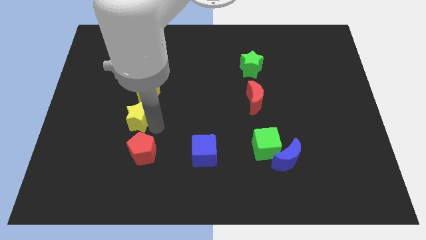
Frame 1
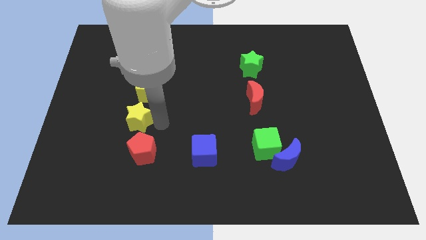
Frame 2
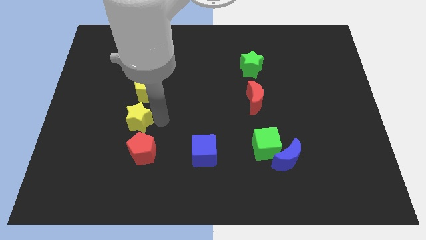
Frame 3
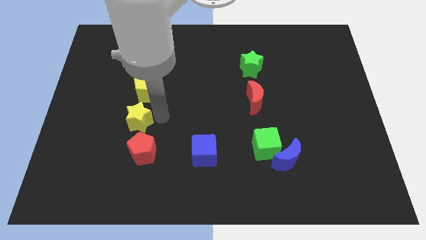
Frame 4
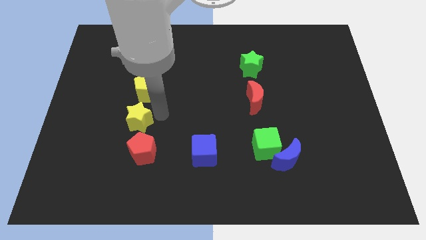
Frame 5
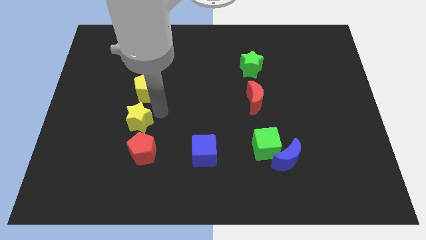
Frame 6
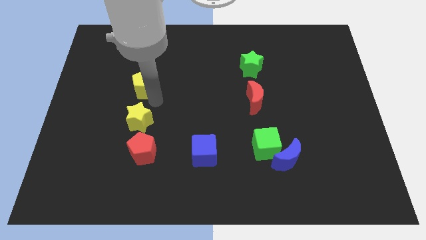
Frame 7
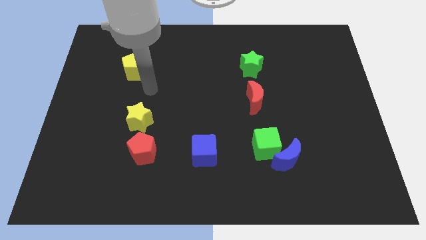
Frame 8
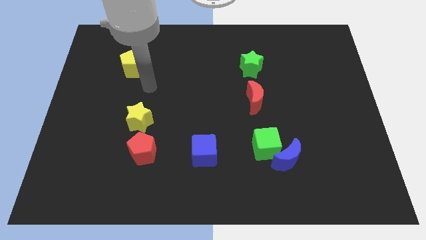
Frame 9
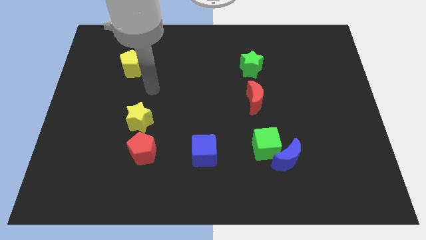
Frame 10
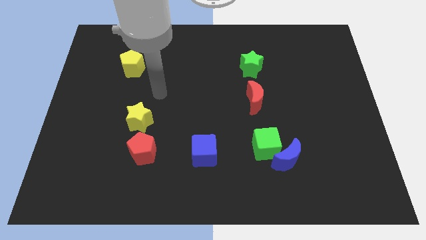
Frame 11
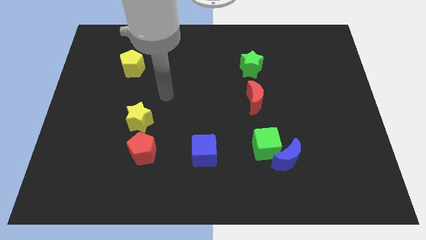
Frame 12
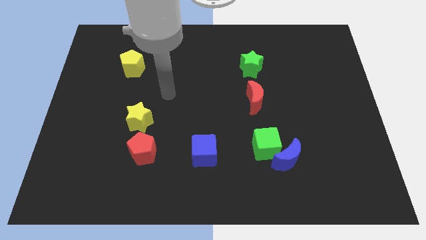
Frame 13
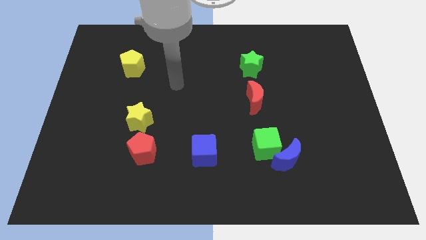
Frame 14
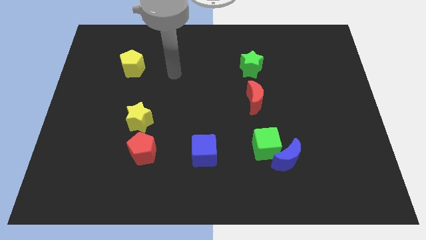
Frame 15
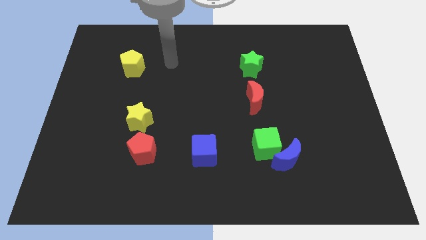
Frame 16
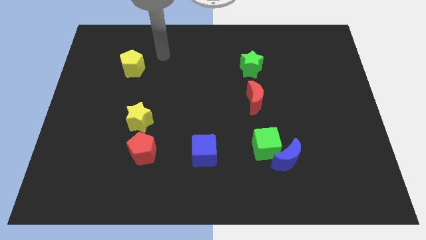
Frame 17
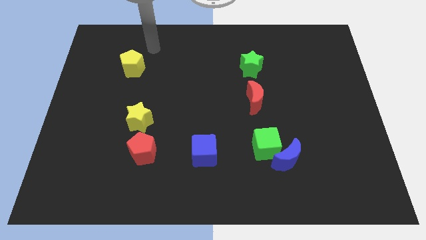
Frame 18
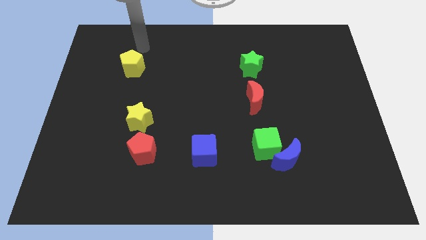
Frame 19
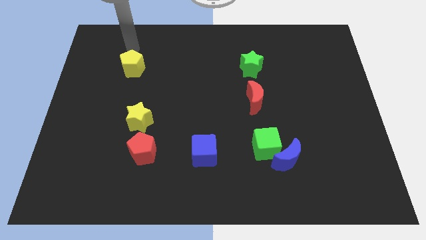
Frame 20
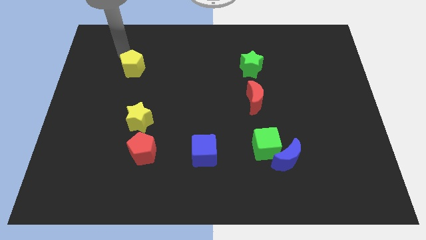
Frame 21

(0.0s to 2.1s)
move the yellow pentagon parallel to green star

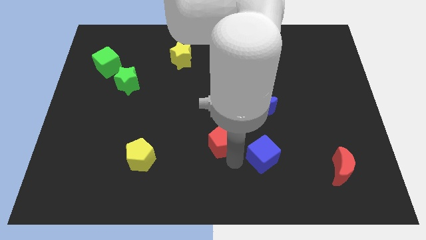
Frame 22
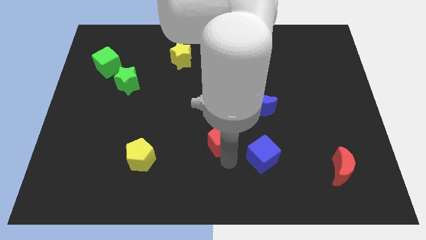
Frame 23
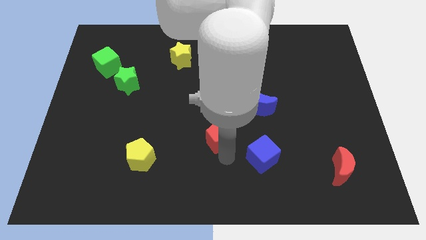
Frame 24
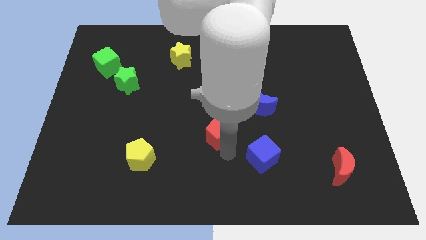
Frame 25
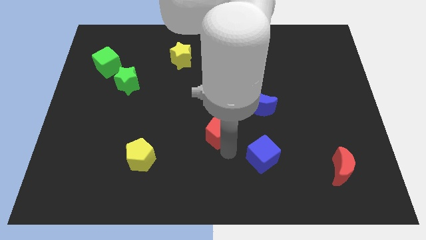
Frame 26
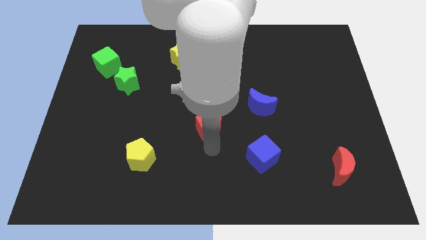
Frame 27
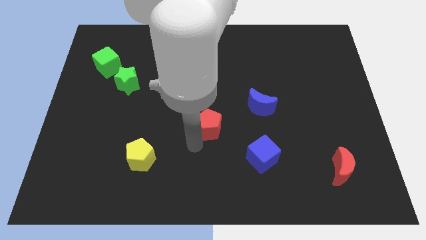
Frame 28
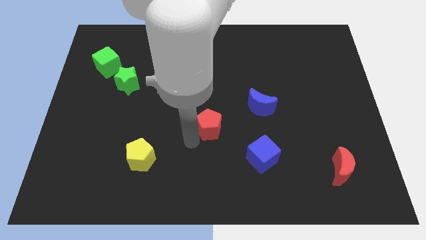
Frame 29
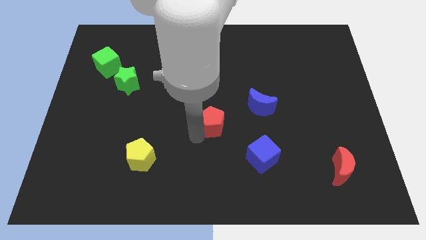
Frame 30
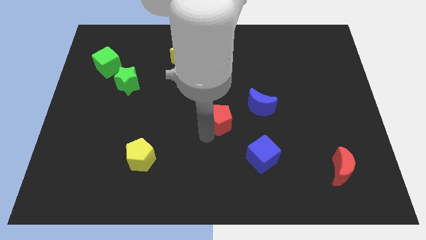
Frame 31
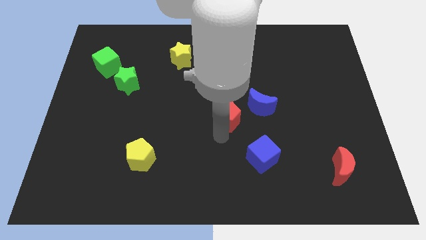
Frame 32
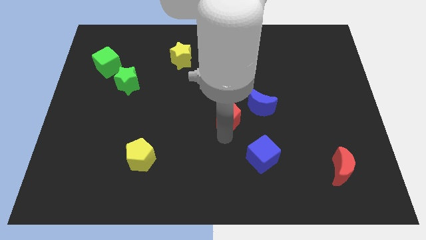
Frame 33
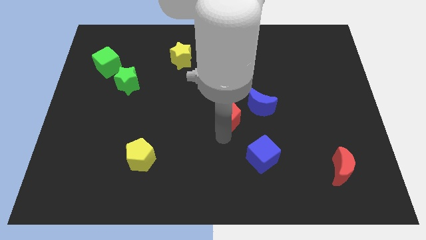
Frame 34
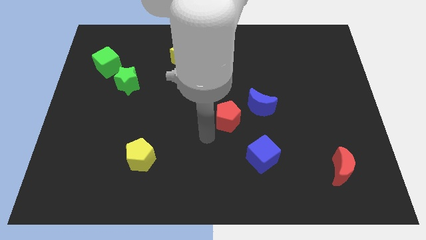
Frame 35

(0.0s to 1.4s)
drag the red pentagon to the top left side of the blue cube

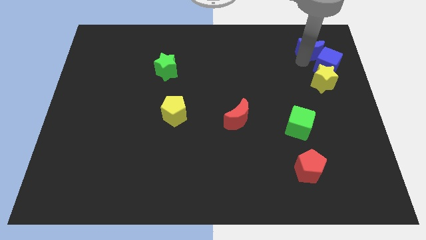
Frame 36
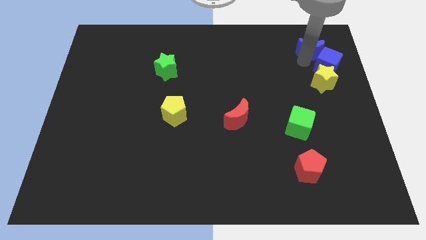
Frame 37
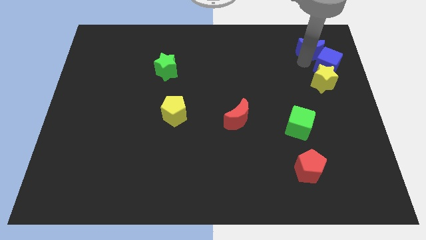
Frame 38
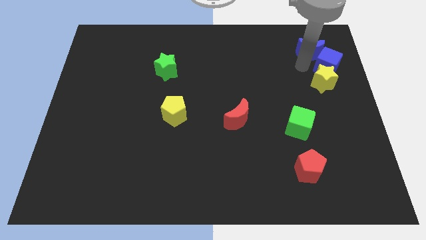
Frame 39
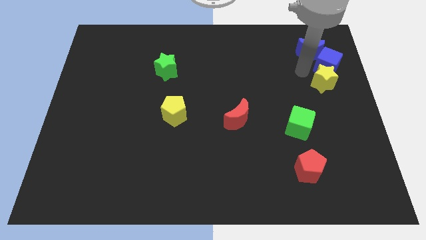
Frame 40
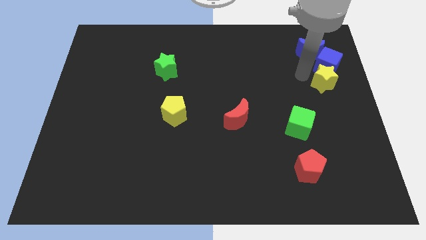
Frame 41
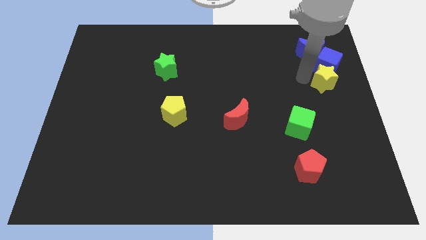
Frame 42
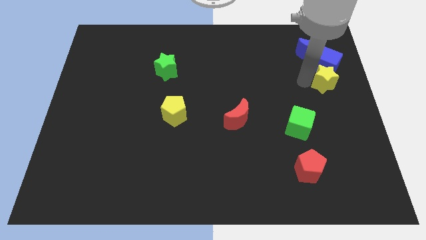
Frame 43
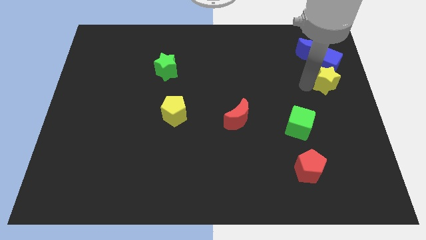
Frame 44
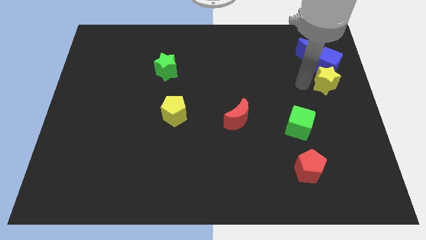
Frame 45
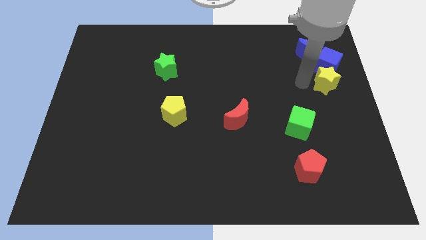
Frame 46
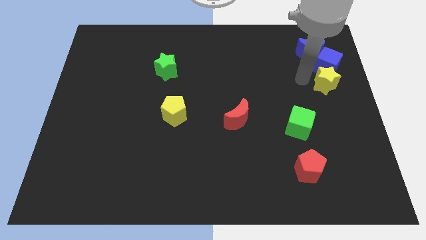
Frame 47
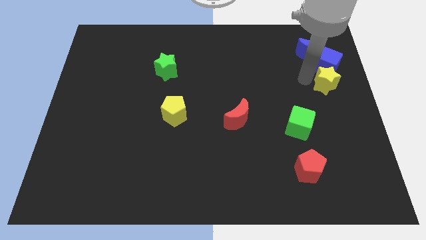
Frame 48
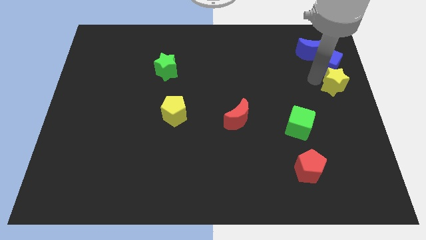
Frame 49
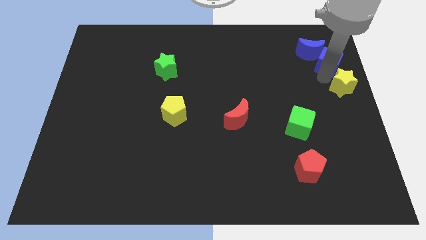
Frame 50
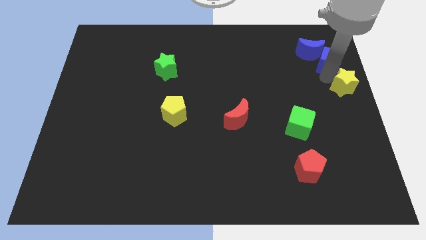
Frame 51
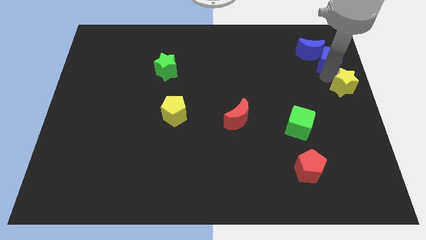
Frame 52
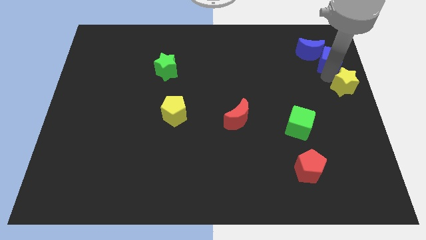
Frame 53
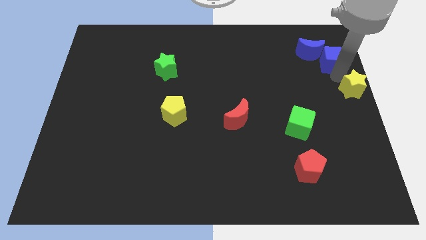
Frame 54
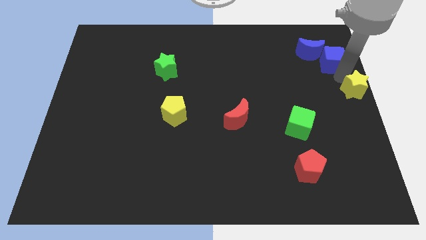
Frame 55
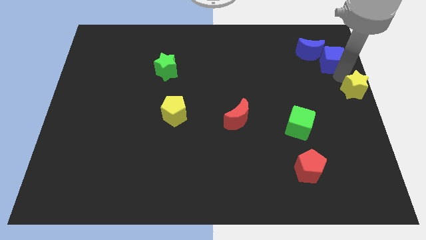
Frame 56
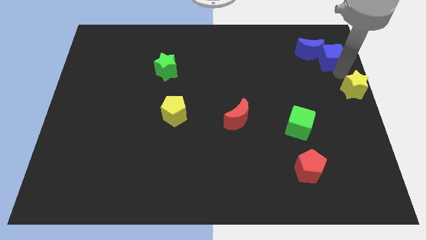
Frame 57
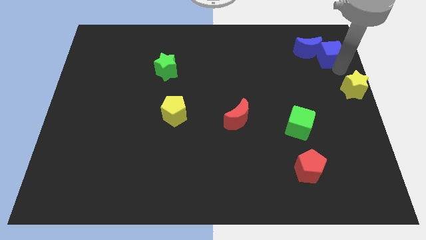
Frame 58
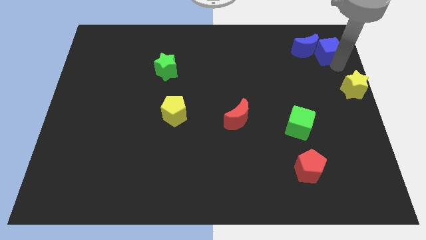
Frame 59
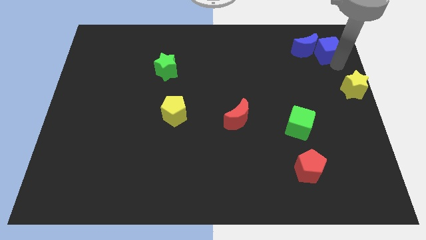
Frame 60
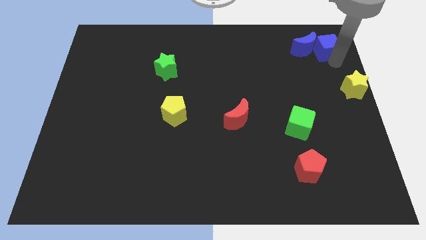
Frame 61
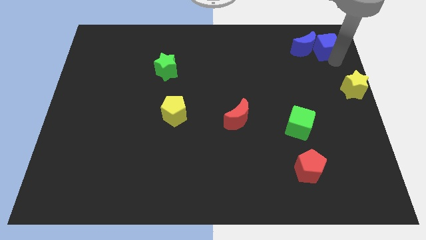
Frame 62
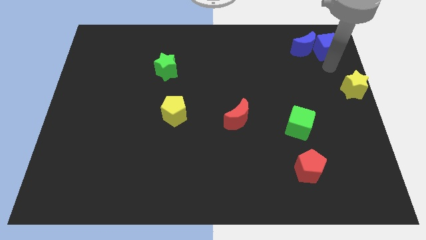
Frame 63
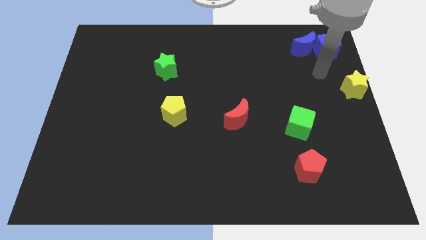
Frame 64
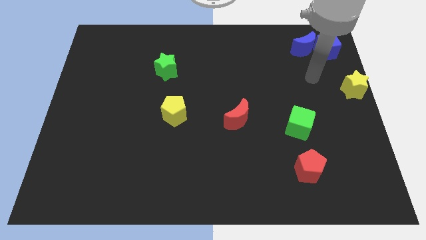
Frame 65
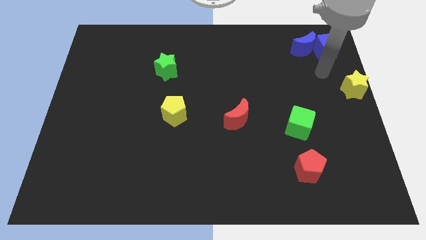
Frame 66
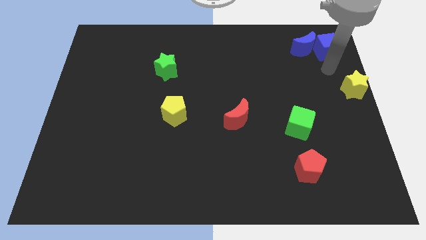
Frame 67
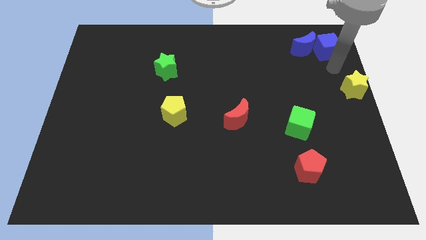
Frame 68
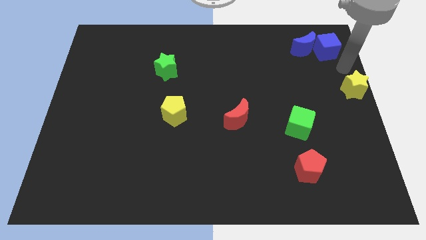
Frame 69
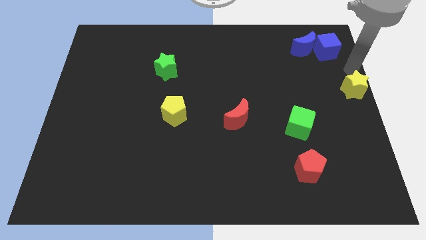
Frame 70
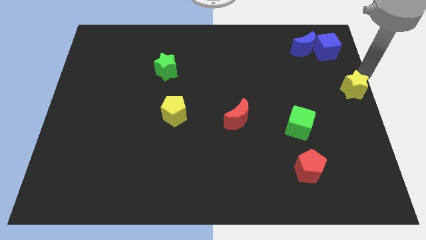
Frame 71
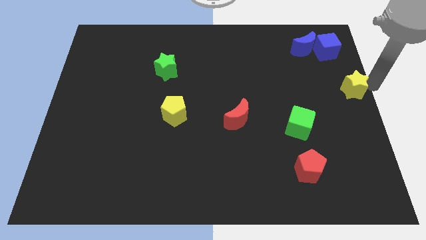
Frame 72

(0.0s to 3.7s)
separate the yellow star from the blue blocks

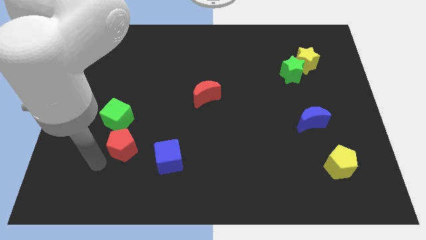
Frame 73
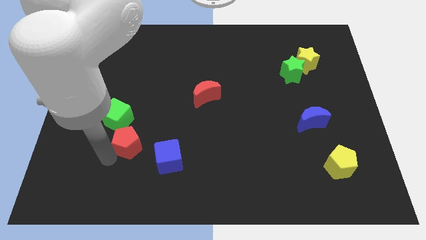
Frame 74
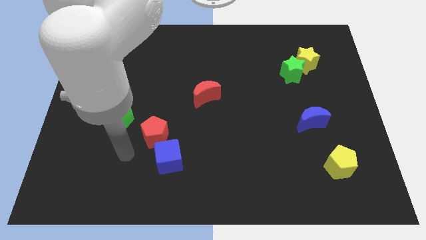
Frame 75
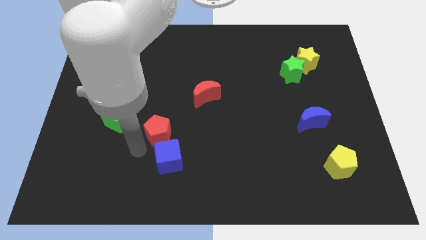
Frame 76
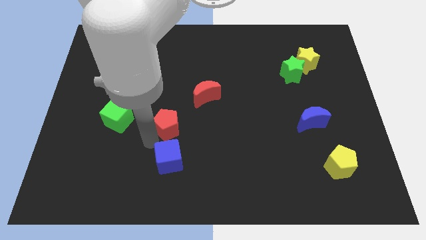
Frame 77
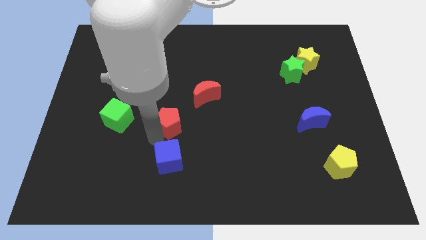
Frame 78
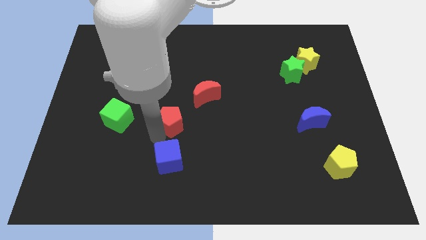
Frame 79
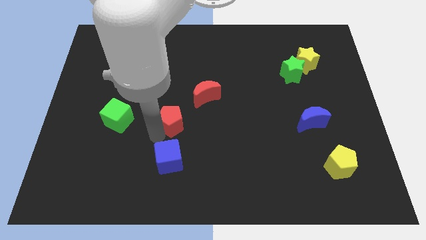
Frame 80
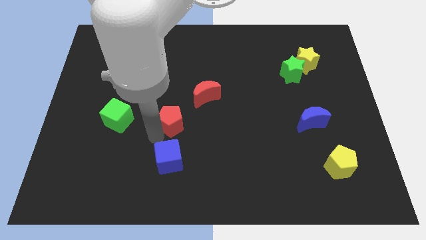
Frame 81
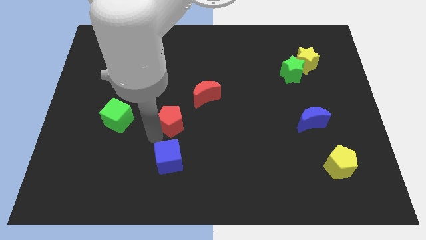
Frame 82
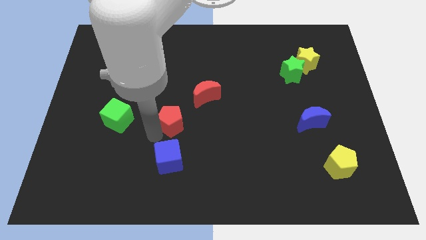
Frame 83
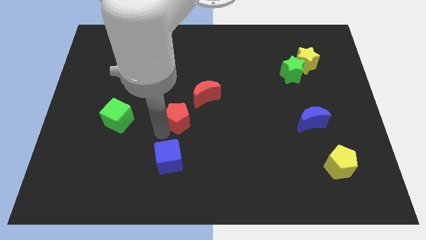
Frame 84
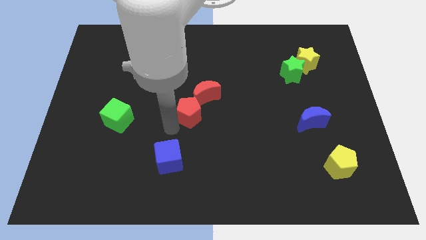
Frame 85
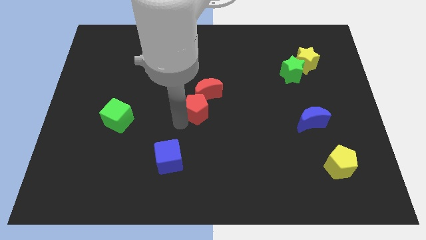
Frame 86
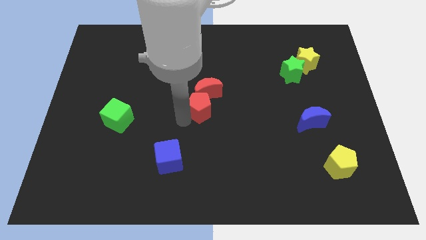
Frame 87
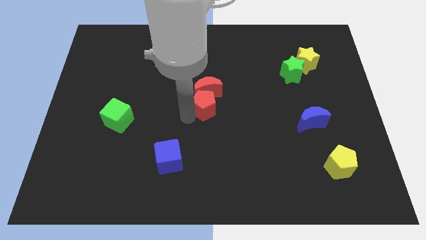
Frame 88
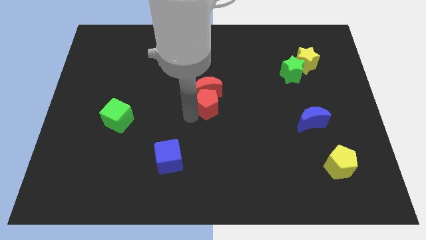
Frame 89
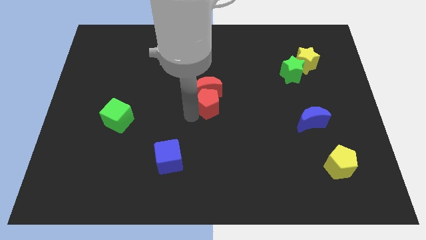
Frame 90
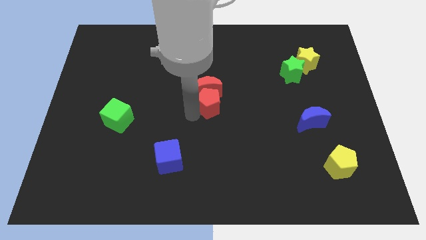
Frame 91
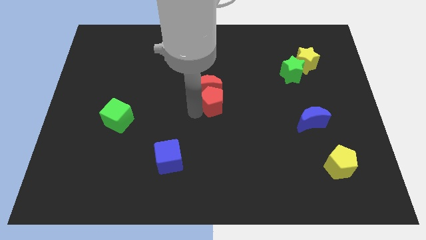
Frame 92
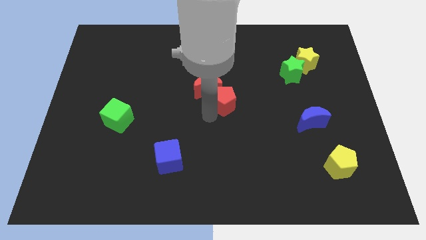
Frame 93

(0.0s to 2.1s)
move the red pentagon close to the red crescent
